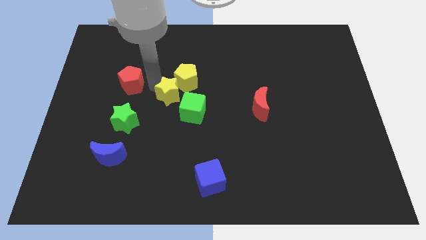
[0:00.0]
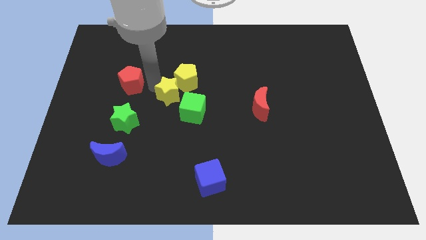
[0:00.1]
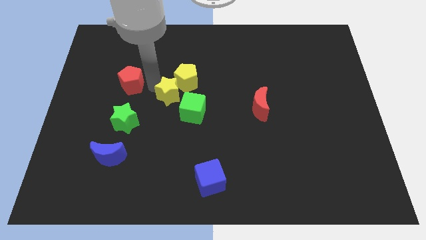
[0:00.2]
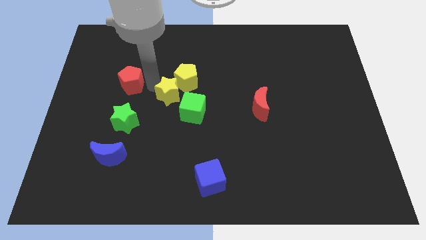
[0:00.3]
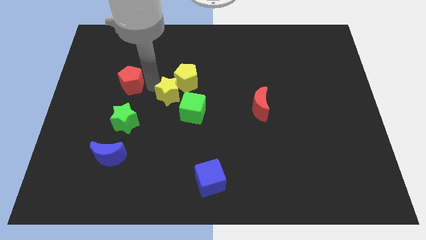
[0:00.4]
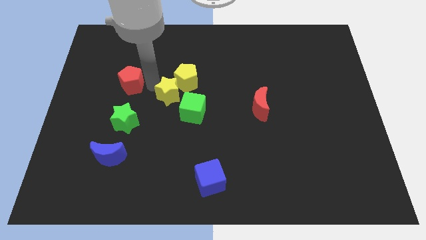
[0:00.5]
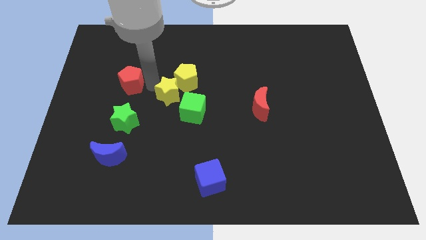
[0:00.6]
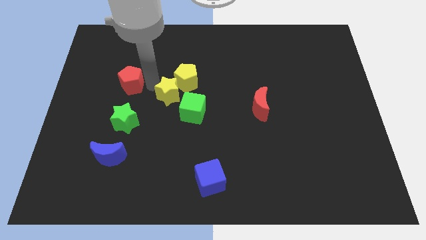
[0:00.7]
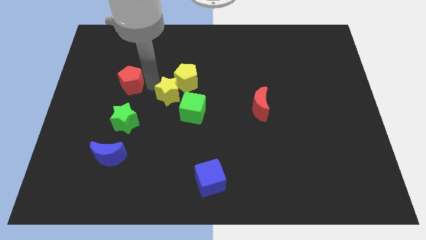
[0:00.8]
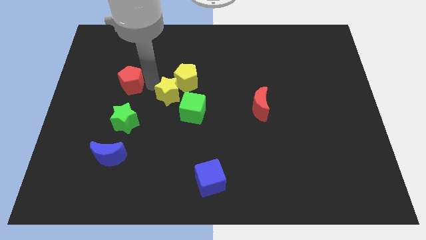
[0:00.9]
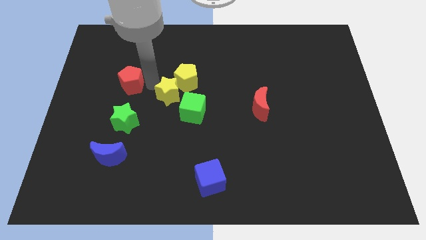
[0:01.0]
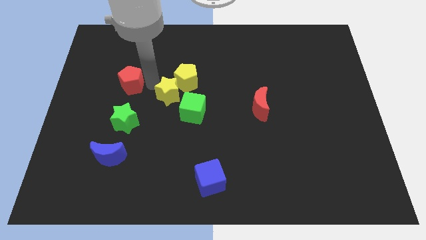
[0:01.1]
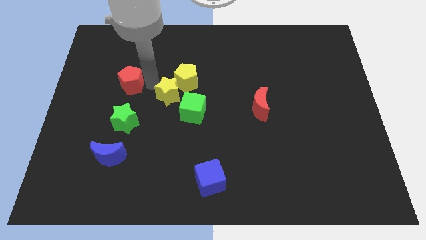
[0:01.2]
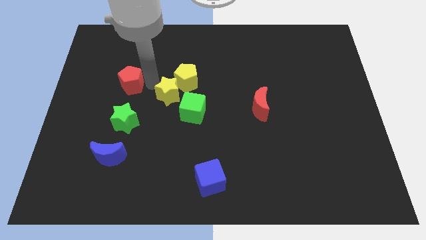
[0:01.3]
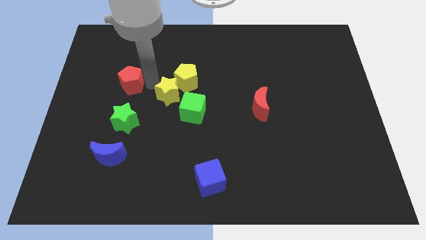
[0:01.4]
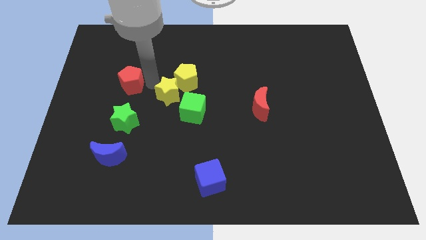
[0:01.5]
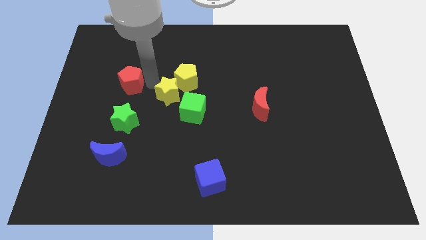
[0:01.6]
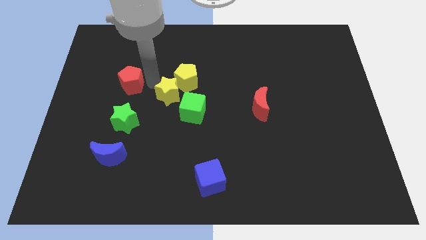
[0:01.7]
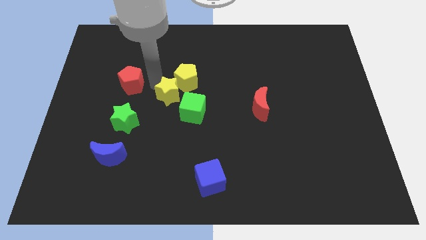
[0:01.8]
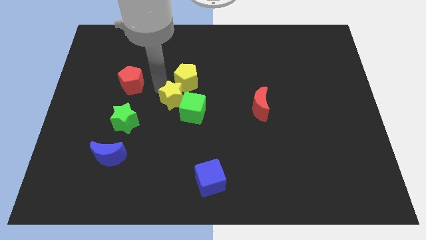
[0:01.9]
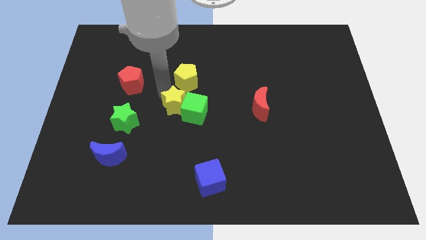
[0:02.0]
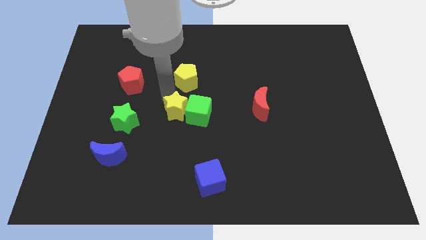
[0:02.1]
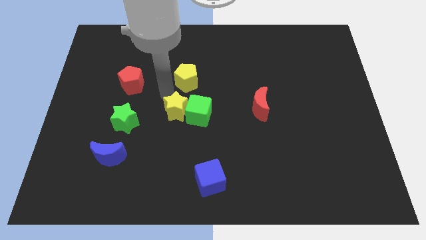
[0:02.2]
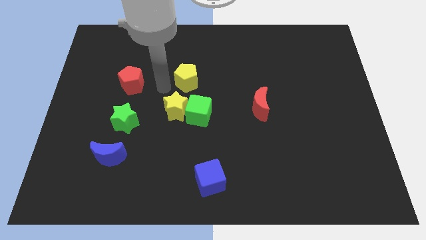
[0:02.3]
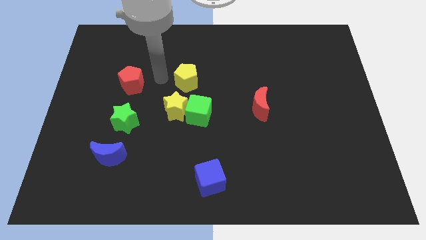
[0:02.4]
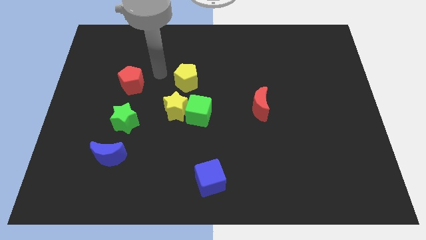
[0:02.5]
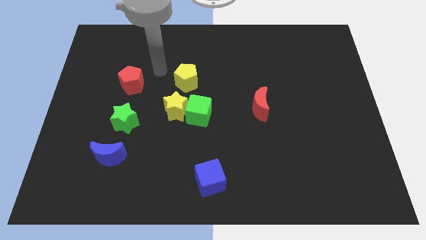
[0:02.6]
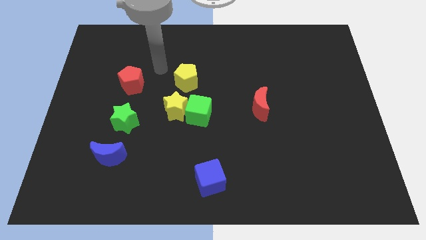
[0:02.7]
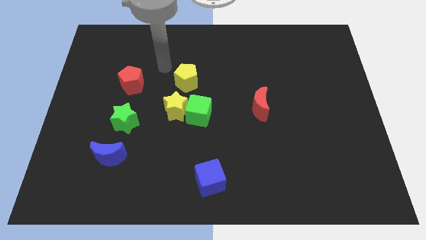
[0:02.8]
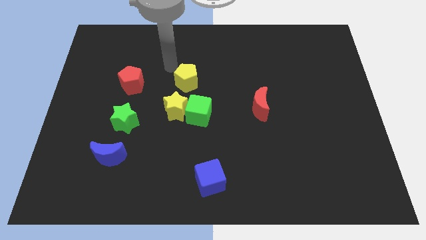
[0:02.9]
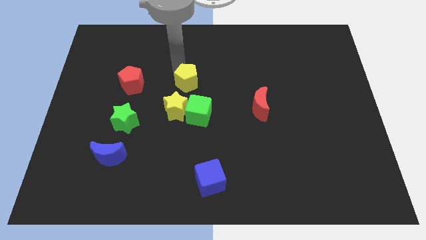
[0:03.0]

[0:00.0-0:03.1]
place the yellow star at the left of the green cube

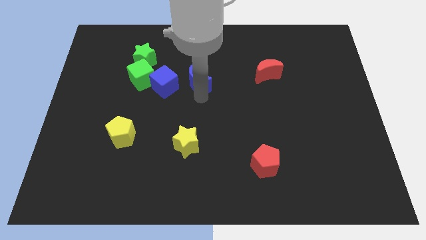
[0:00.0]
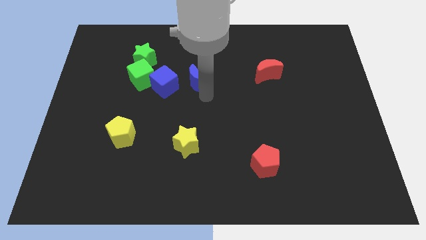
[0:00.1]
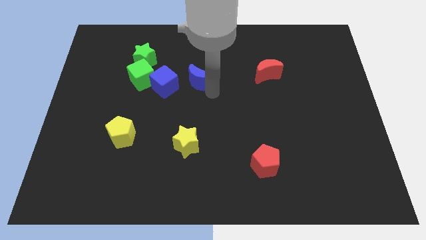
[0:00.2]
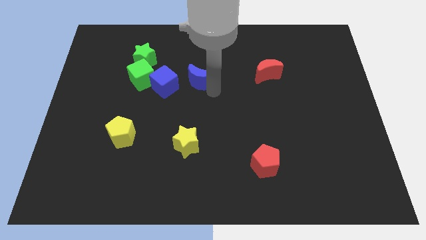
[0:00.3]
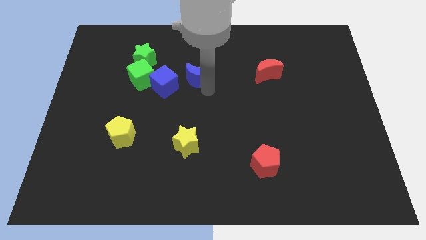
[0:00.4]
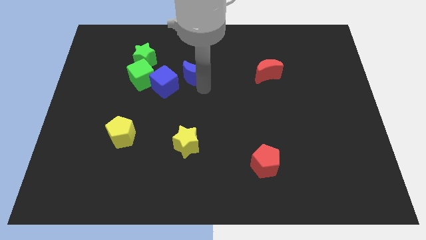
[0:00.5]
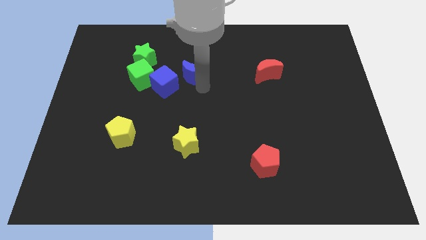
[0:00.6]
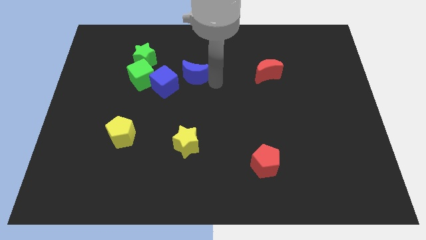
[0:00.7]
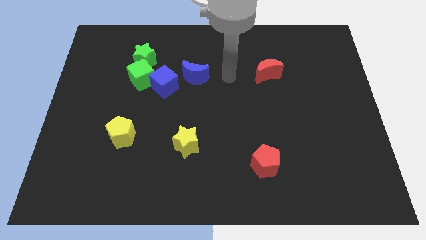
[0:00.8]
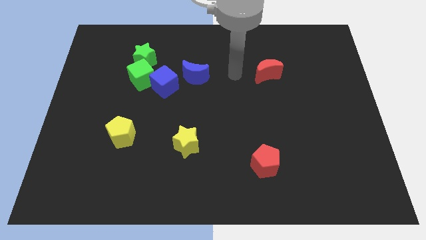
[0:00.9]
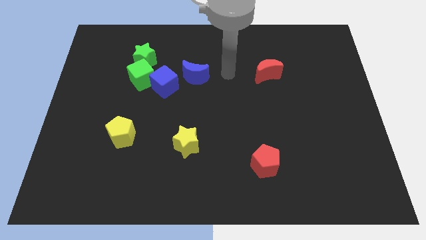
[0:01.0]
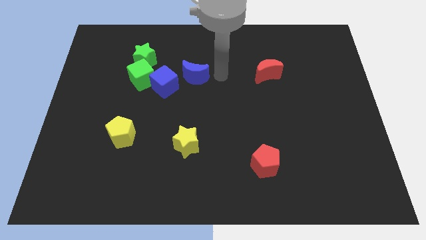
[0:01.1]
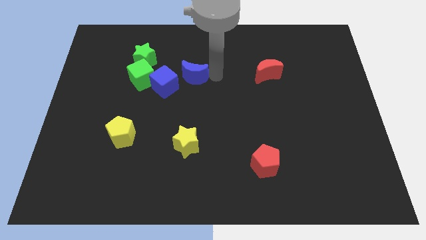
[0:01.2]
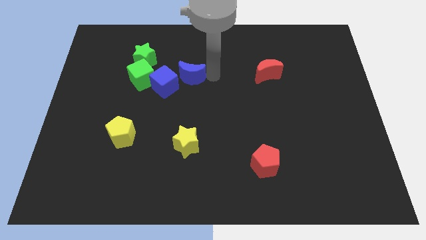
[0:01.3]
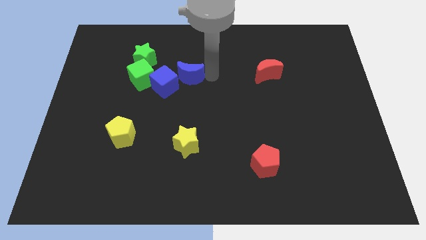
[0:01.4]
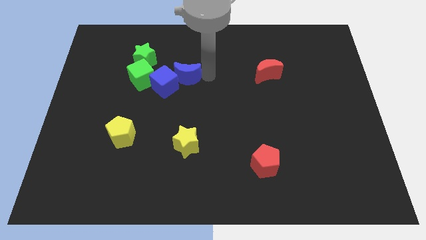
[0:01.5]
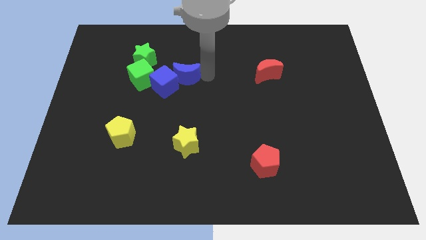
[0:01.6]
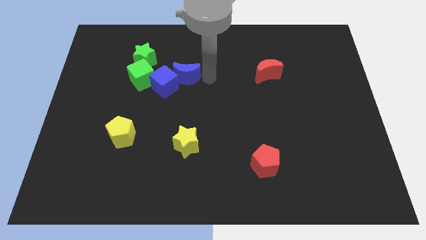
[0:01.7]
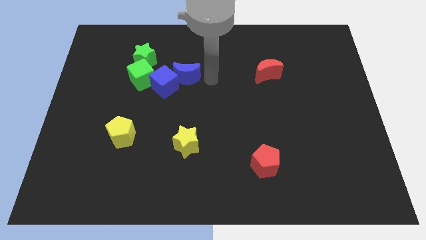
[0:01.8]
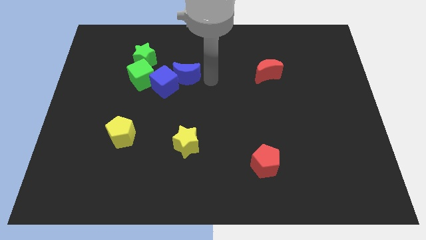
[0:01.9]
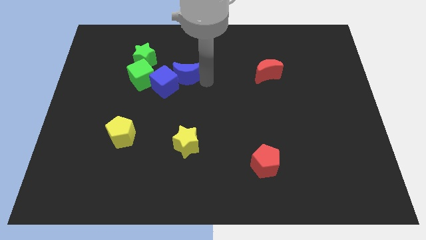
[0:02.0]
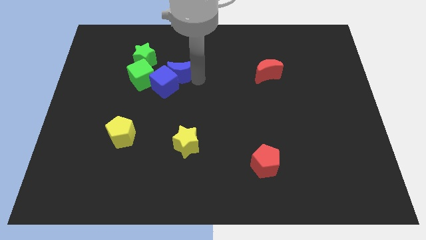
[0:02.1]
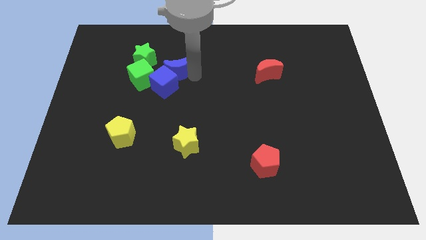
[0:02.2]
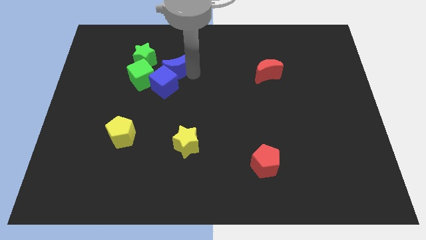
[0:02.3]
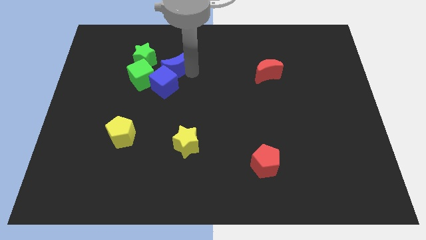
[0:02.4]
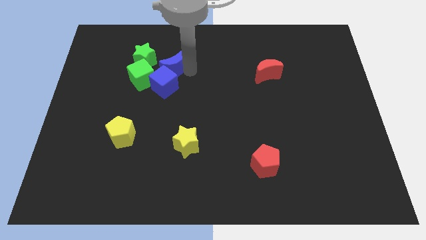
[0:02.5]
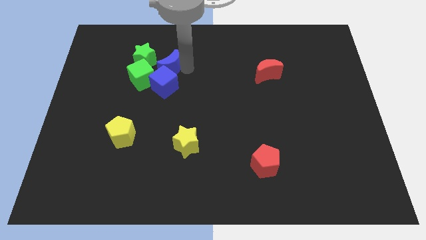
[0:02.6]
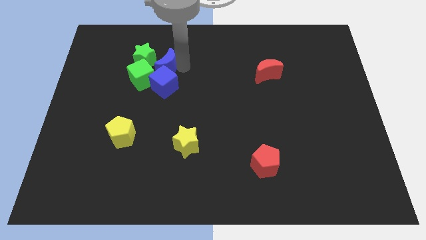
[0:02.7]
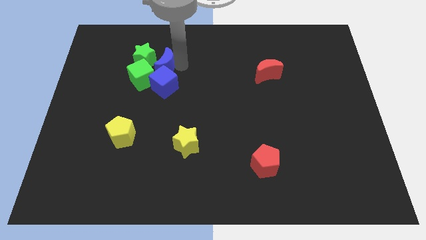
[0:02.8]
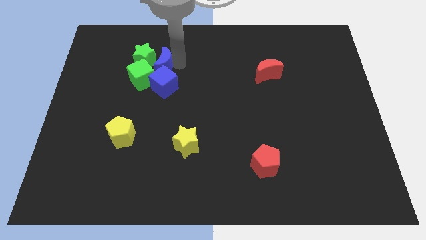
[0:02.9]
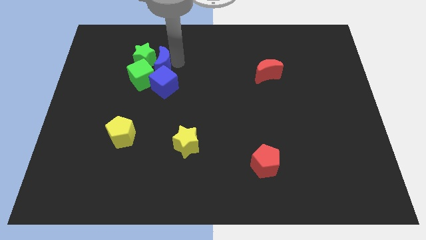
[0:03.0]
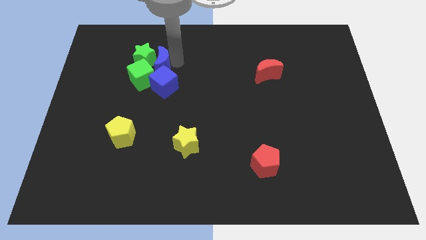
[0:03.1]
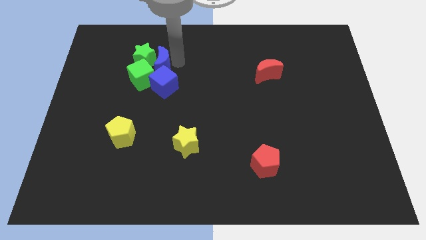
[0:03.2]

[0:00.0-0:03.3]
move the blue crescent above the blue cube

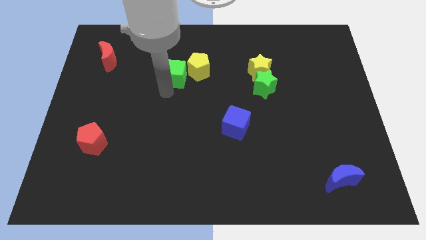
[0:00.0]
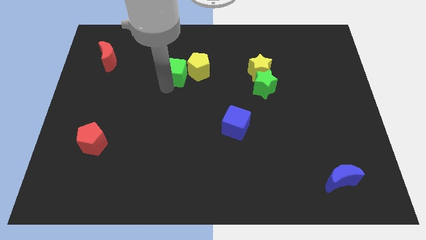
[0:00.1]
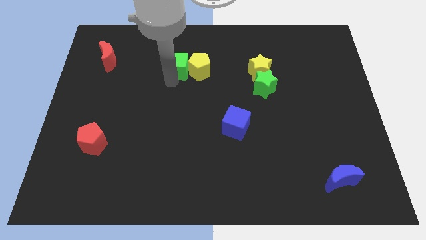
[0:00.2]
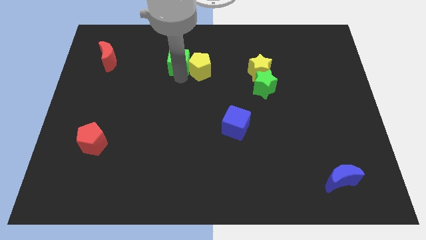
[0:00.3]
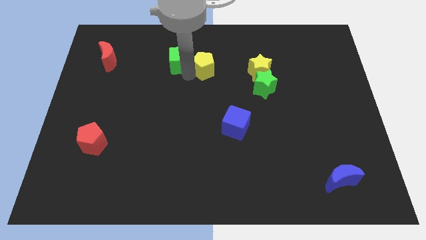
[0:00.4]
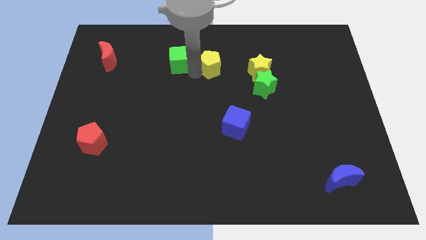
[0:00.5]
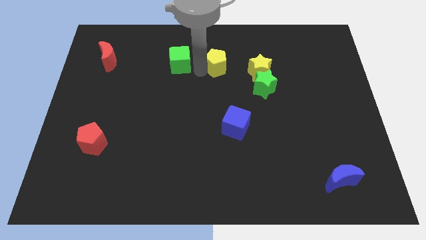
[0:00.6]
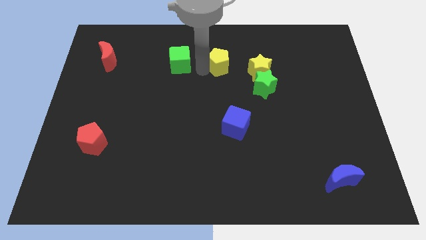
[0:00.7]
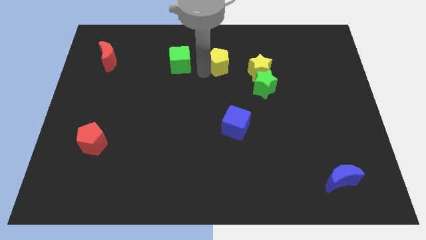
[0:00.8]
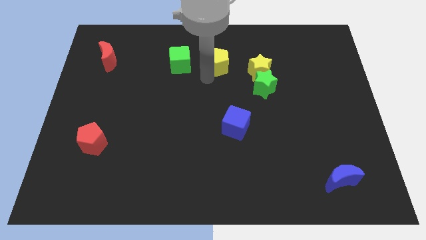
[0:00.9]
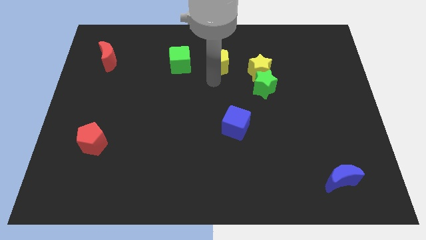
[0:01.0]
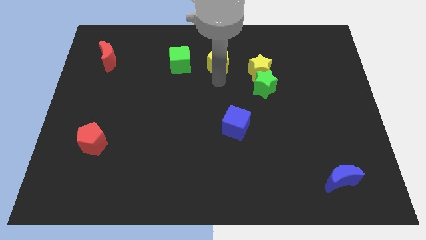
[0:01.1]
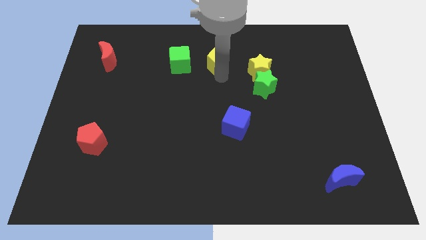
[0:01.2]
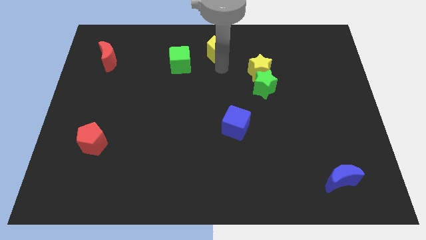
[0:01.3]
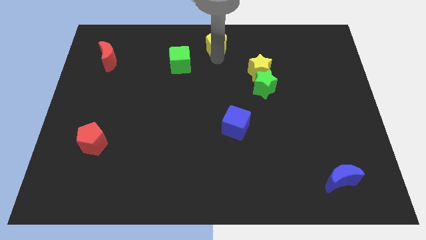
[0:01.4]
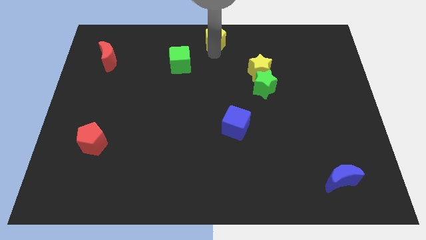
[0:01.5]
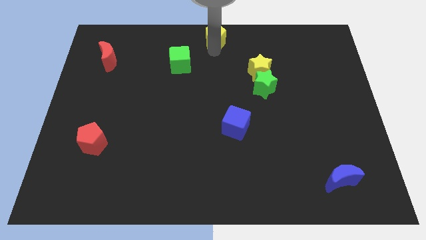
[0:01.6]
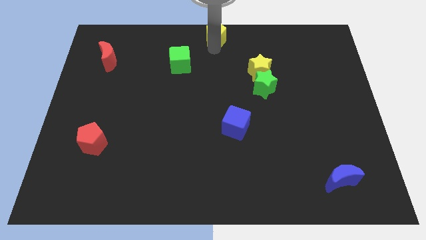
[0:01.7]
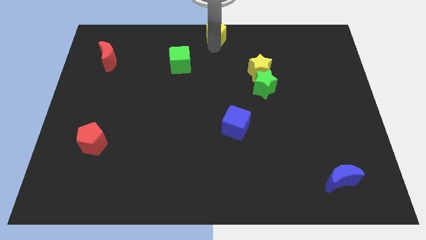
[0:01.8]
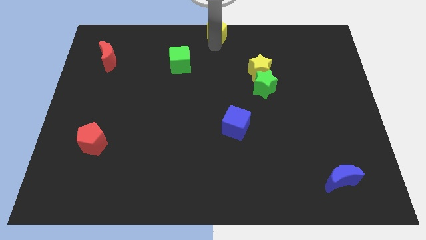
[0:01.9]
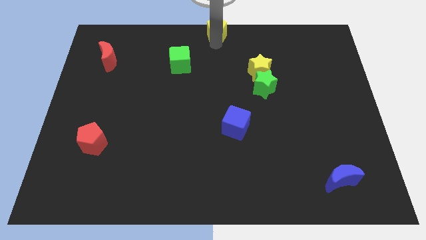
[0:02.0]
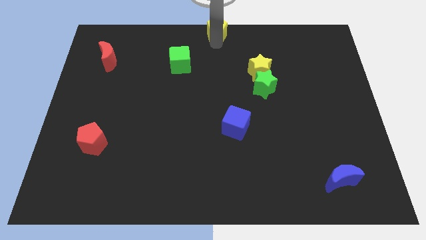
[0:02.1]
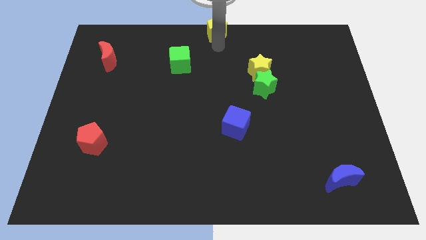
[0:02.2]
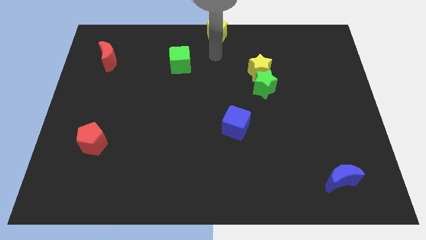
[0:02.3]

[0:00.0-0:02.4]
push the green cube and yellow pentagon towards the top side of the board

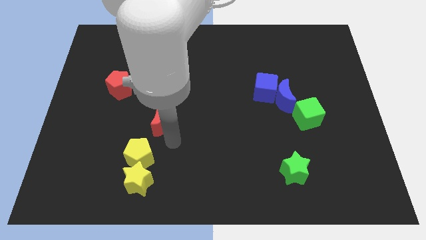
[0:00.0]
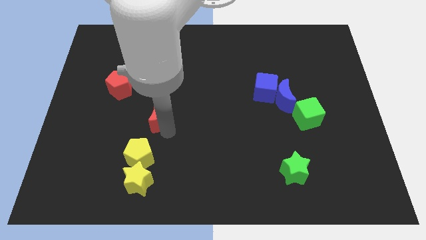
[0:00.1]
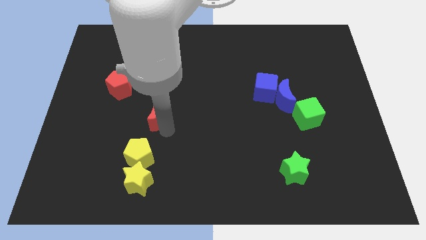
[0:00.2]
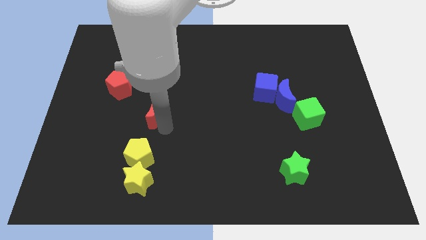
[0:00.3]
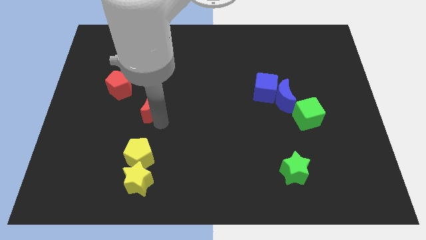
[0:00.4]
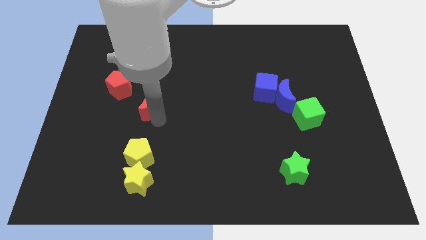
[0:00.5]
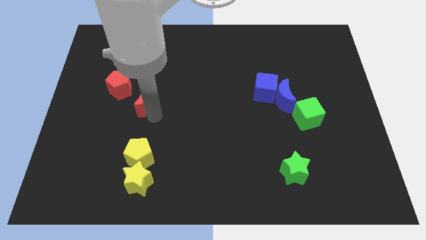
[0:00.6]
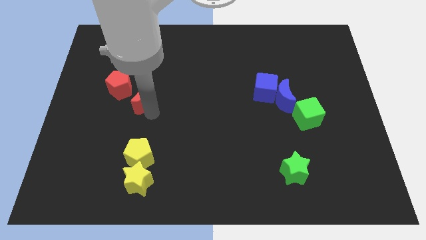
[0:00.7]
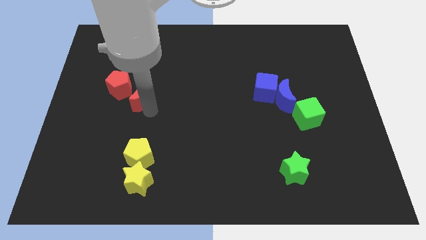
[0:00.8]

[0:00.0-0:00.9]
push red moon towards red pentagon
